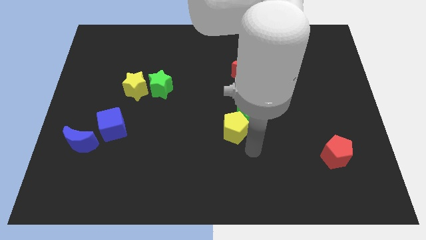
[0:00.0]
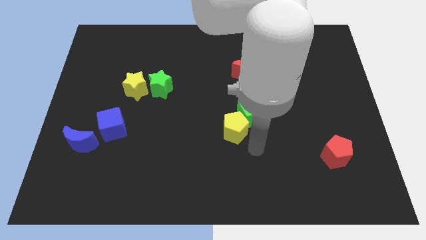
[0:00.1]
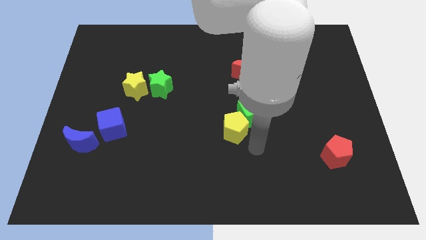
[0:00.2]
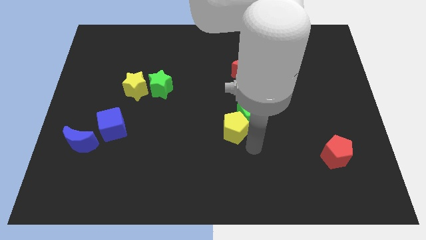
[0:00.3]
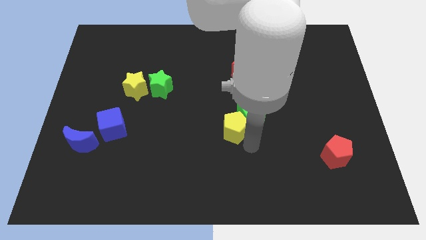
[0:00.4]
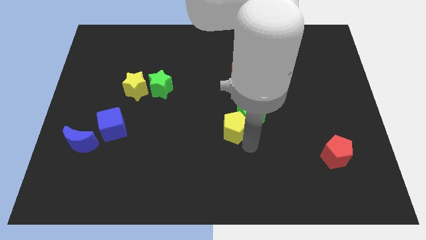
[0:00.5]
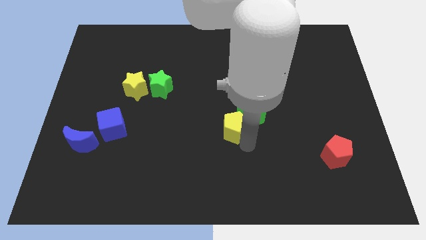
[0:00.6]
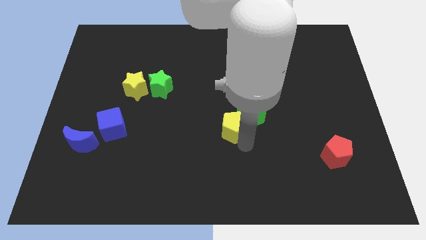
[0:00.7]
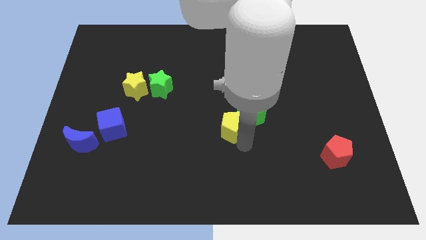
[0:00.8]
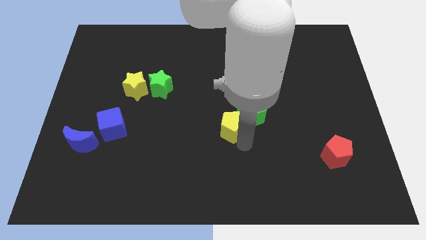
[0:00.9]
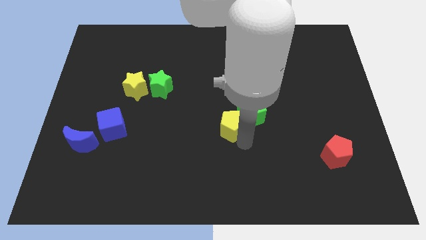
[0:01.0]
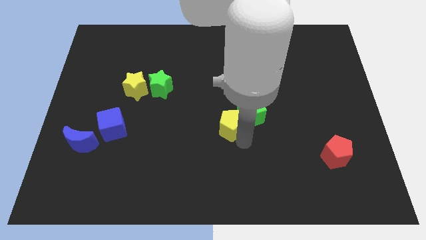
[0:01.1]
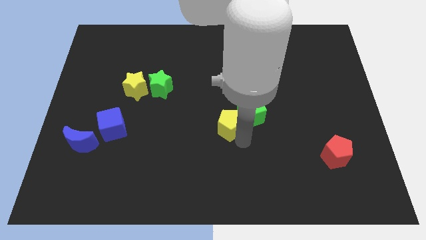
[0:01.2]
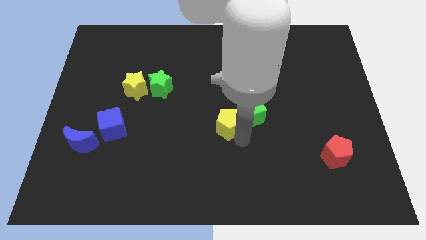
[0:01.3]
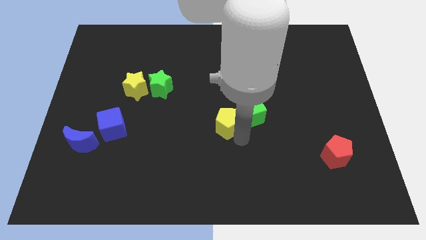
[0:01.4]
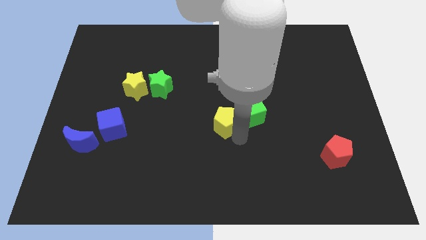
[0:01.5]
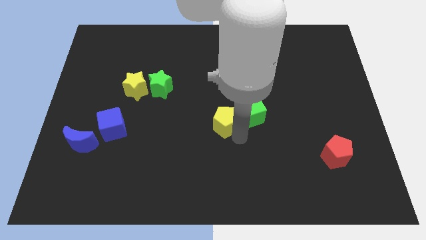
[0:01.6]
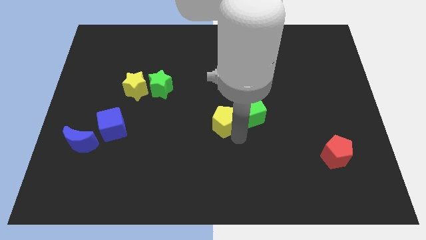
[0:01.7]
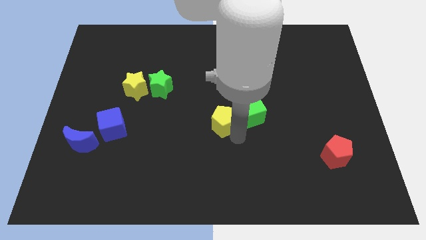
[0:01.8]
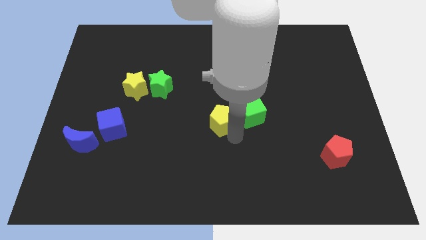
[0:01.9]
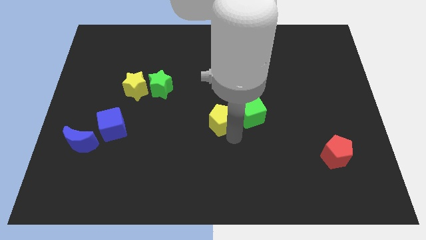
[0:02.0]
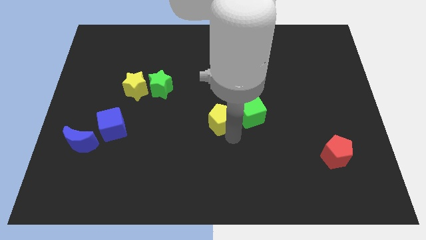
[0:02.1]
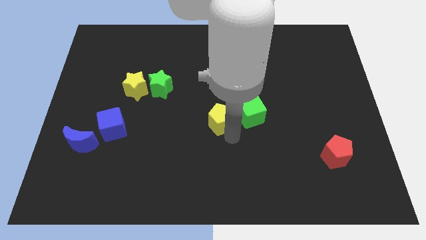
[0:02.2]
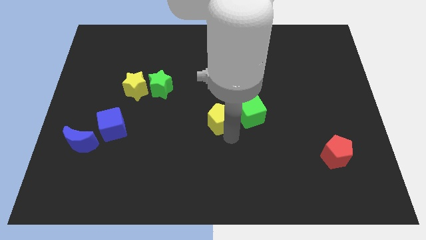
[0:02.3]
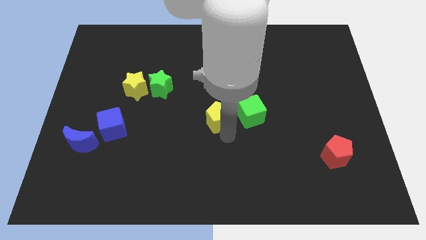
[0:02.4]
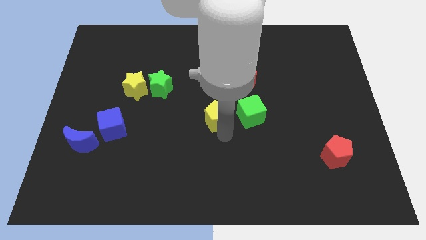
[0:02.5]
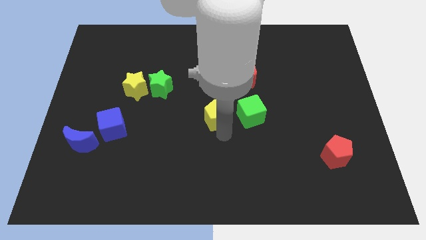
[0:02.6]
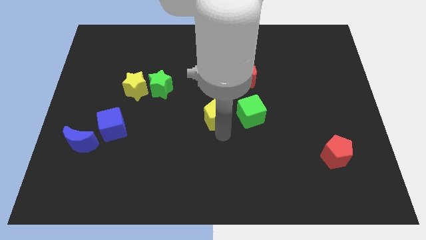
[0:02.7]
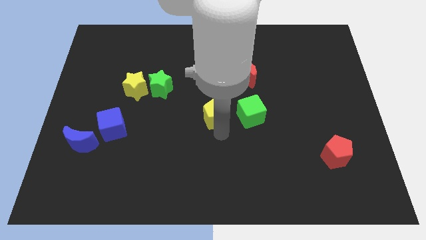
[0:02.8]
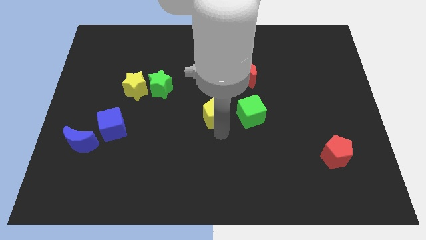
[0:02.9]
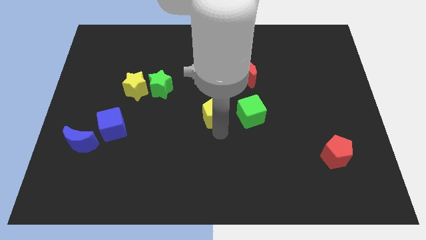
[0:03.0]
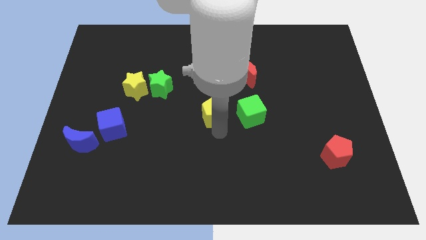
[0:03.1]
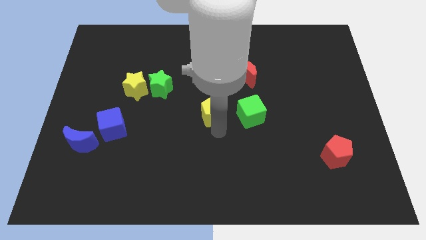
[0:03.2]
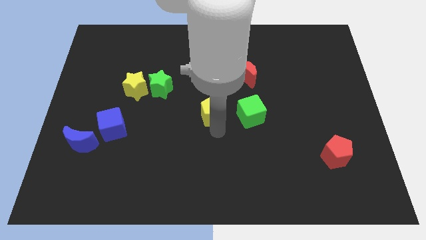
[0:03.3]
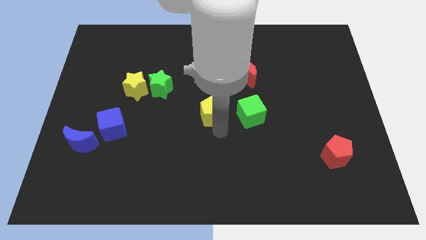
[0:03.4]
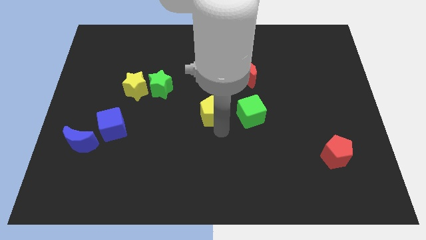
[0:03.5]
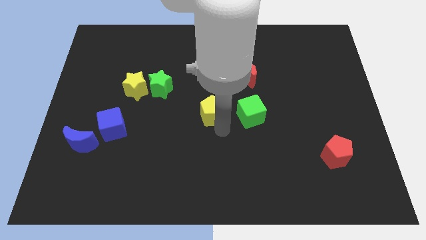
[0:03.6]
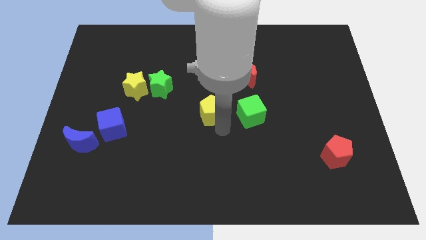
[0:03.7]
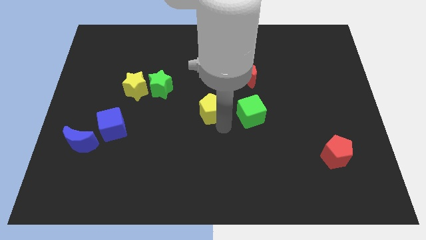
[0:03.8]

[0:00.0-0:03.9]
move the yellow pentagon away from the green cube

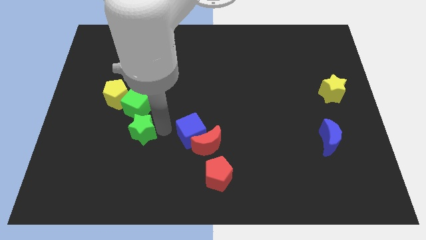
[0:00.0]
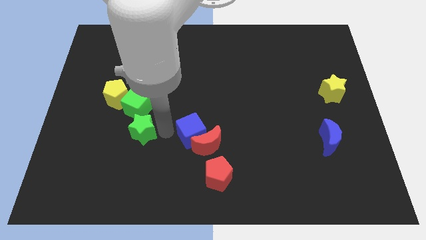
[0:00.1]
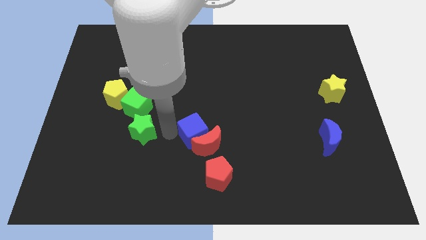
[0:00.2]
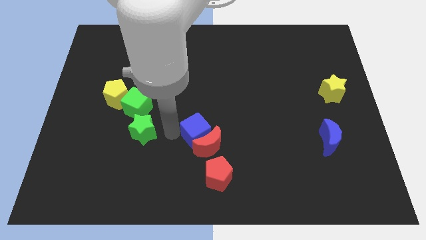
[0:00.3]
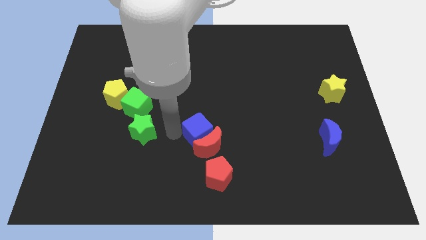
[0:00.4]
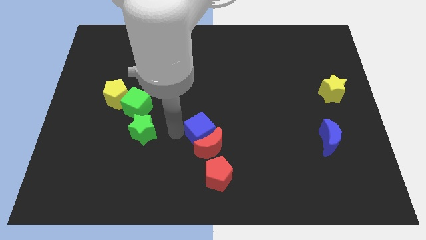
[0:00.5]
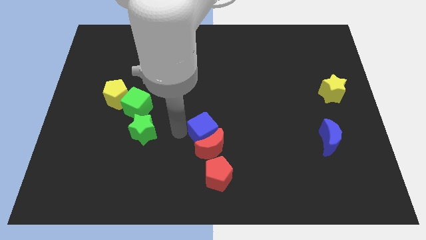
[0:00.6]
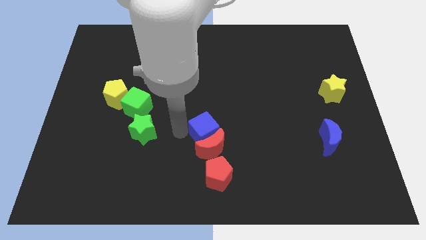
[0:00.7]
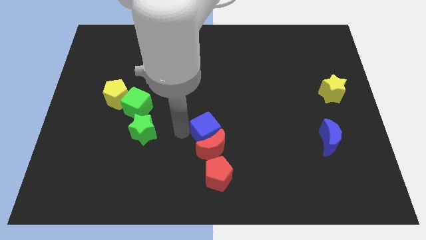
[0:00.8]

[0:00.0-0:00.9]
push the blue cube top of the red crescent

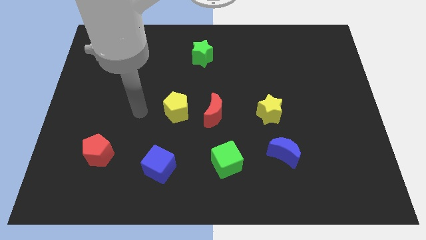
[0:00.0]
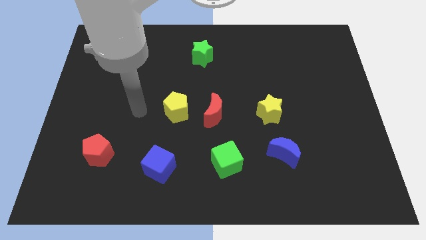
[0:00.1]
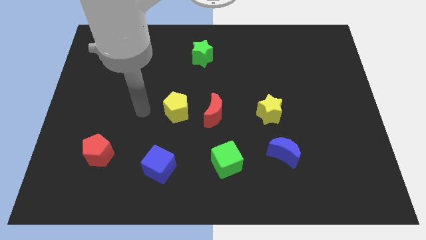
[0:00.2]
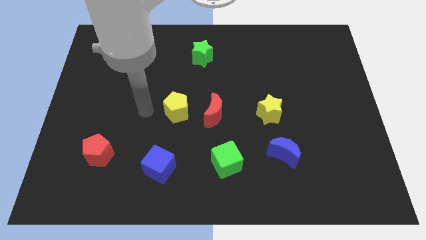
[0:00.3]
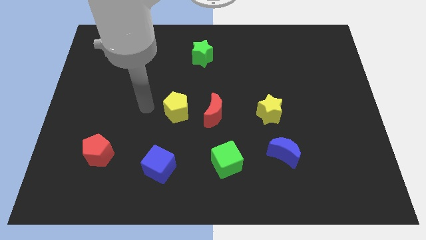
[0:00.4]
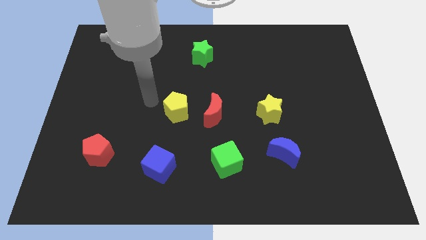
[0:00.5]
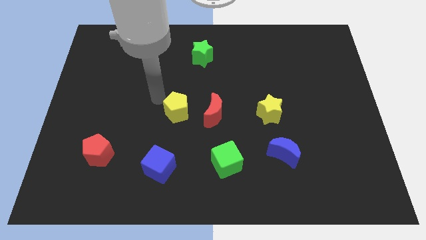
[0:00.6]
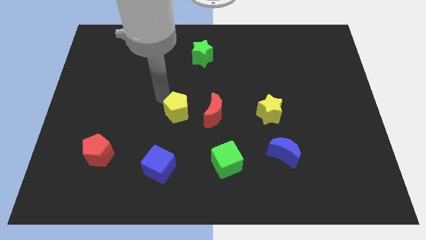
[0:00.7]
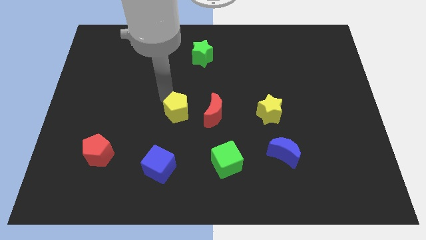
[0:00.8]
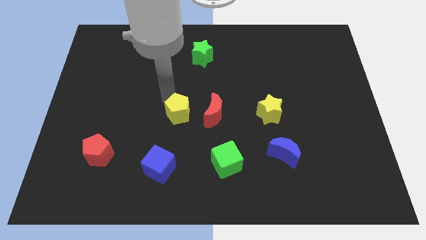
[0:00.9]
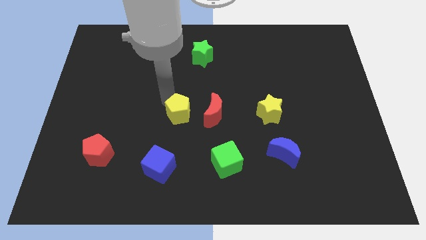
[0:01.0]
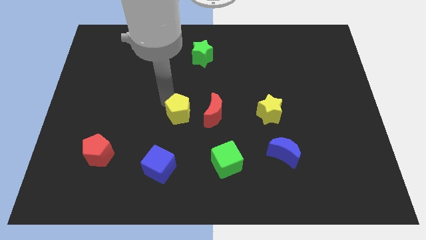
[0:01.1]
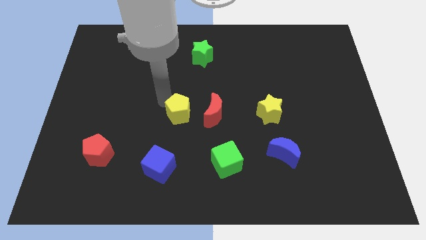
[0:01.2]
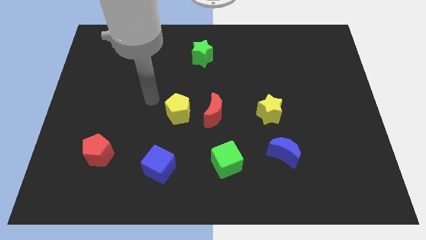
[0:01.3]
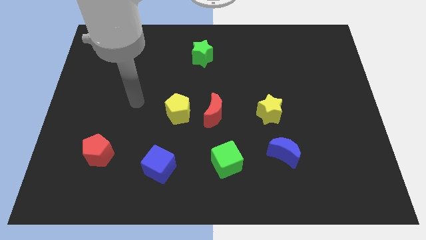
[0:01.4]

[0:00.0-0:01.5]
move the yellow pentagon slightly to the bottom

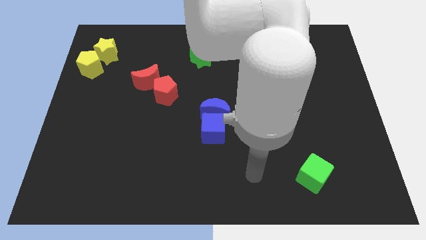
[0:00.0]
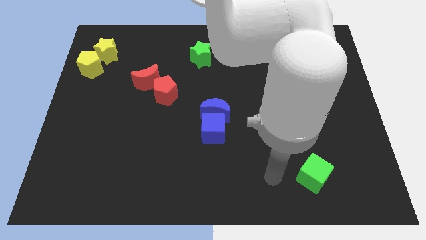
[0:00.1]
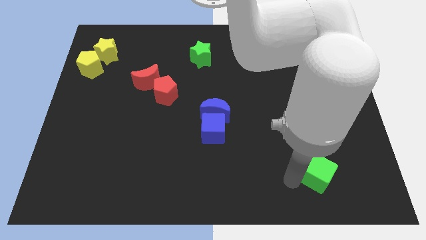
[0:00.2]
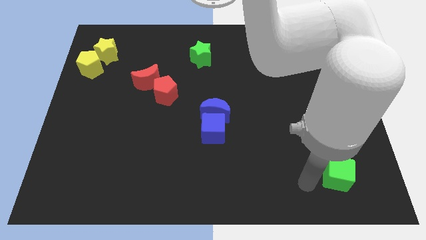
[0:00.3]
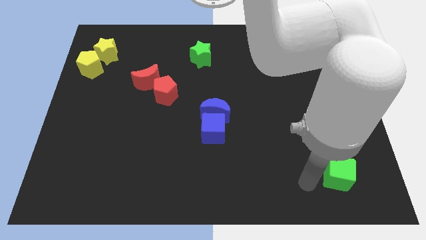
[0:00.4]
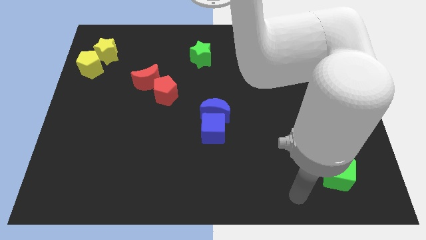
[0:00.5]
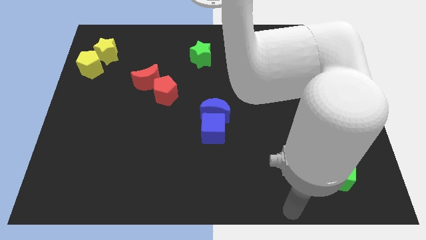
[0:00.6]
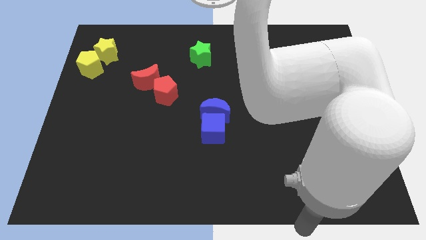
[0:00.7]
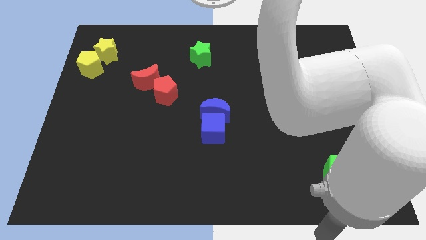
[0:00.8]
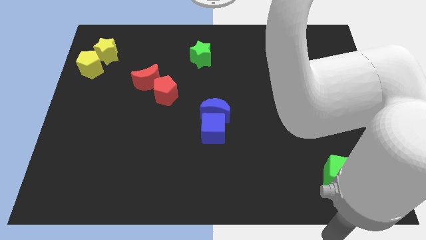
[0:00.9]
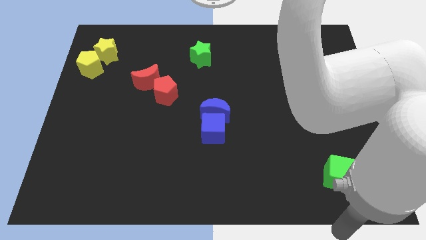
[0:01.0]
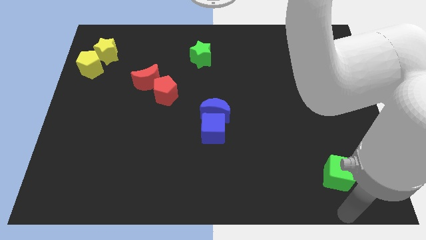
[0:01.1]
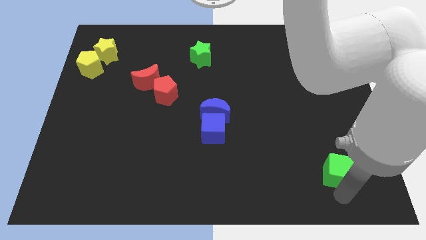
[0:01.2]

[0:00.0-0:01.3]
slightly push the green cube towards the right

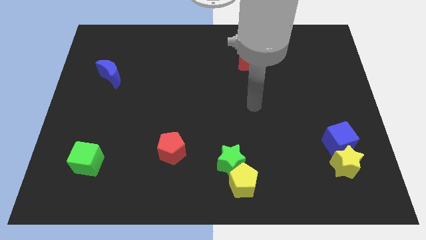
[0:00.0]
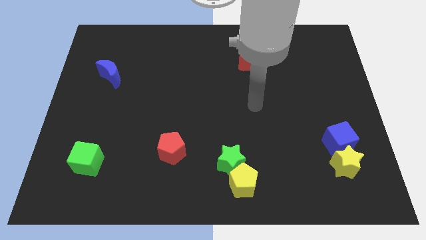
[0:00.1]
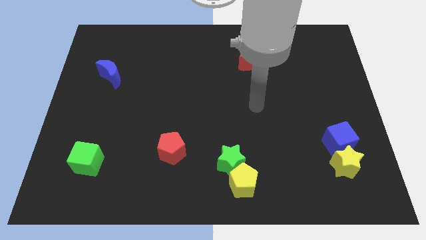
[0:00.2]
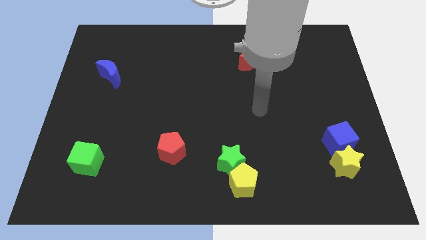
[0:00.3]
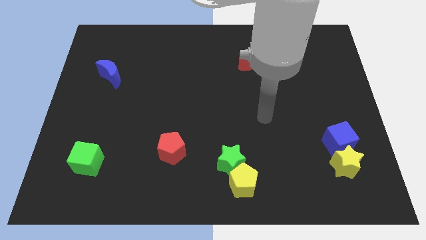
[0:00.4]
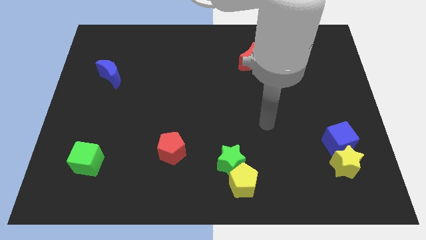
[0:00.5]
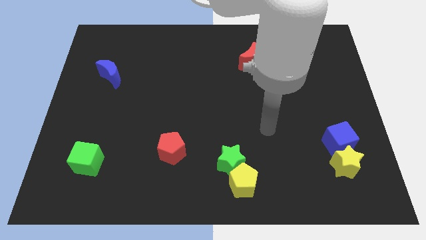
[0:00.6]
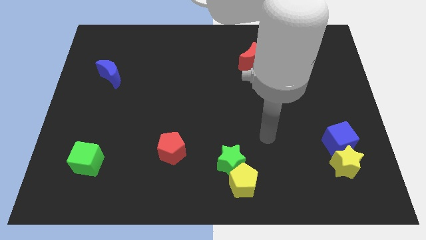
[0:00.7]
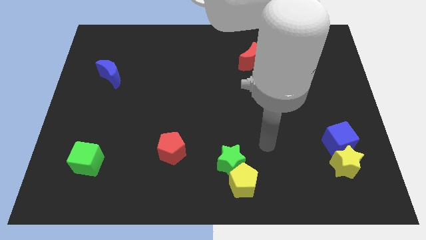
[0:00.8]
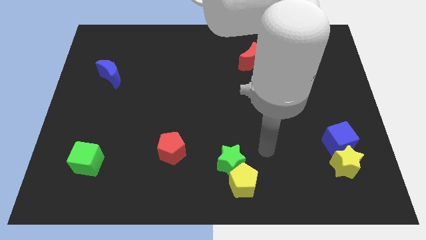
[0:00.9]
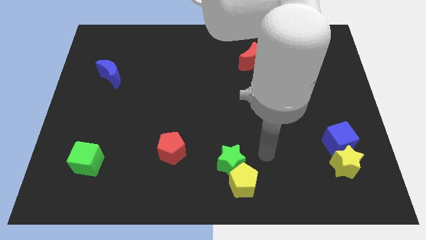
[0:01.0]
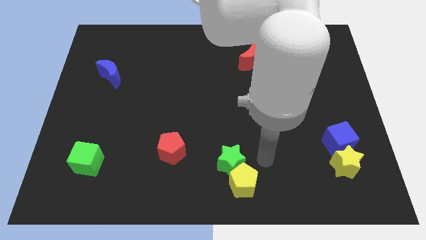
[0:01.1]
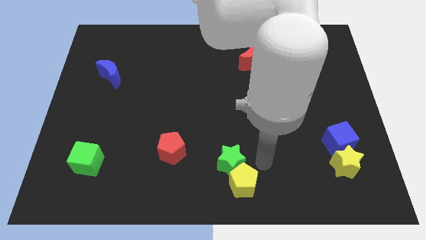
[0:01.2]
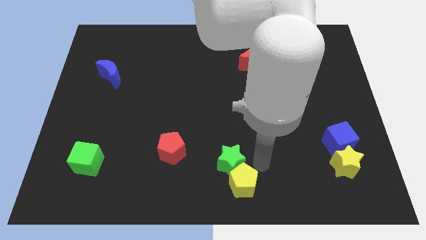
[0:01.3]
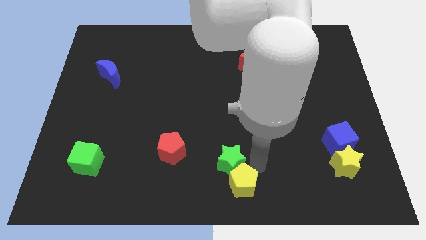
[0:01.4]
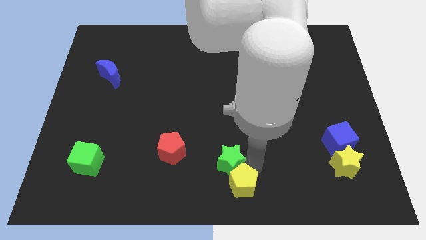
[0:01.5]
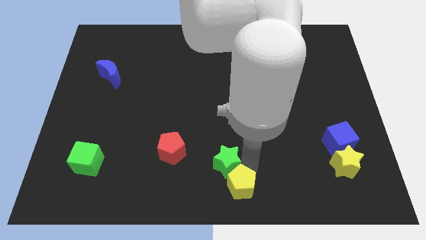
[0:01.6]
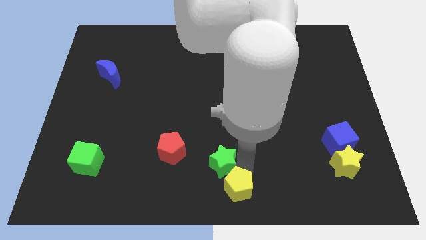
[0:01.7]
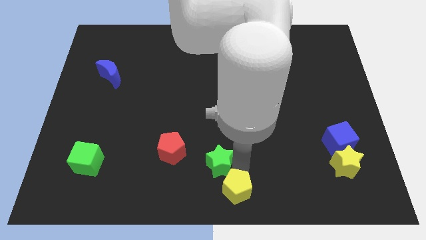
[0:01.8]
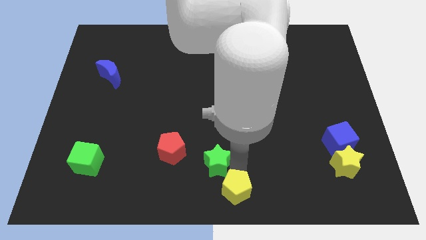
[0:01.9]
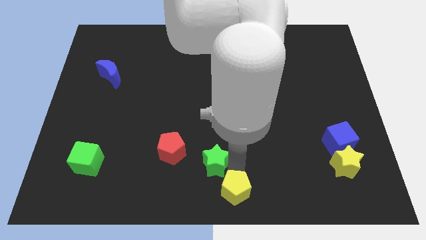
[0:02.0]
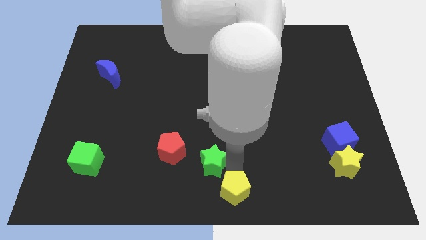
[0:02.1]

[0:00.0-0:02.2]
slightly push the yellow pentagon away from the green star
